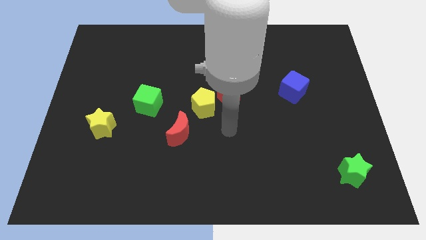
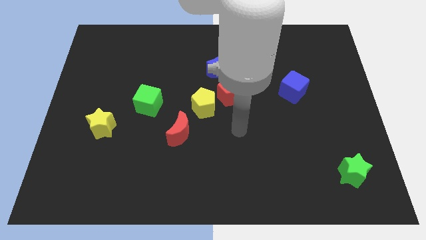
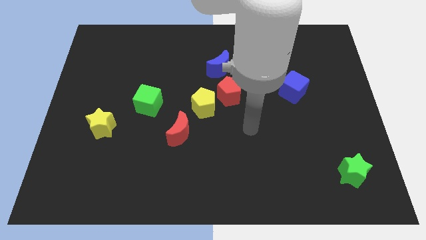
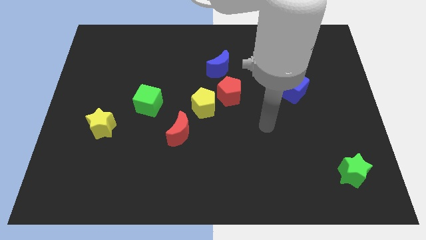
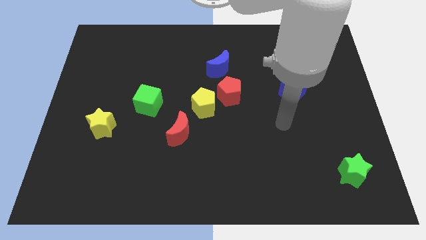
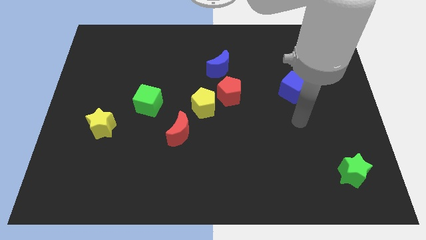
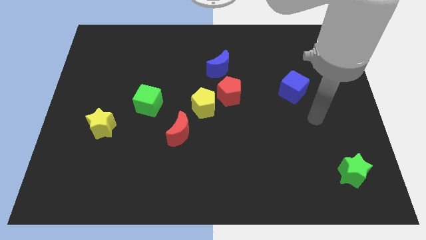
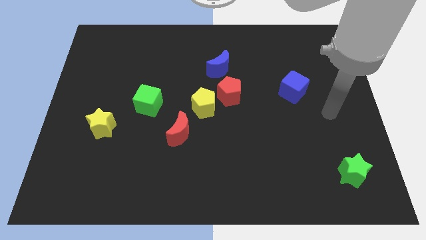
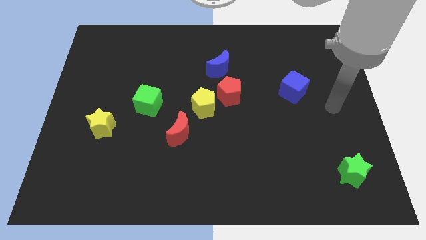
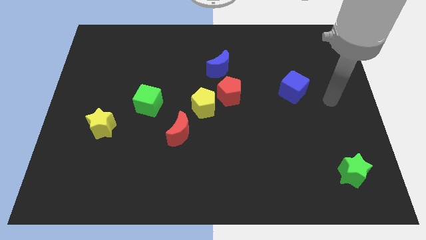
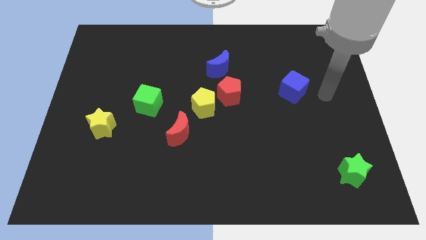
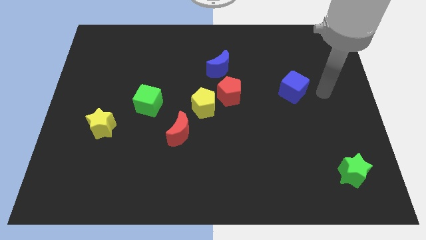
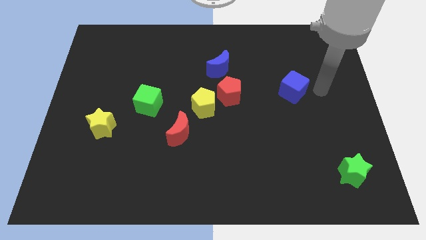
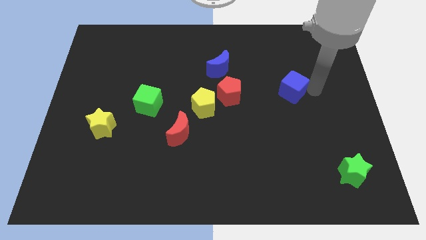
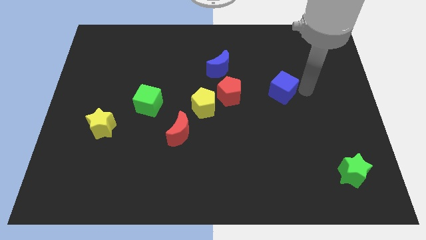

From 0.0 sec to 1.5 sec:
move your arm right towards the blue cube

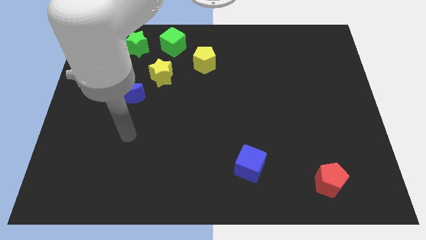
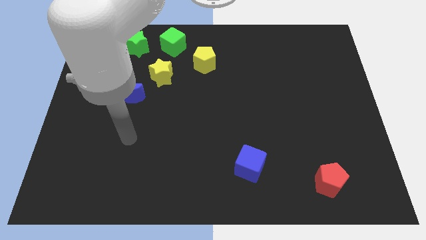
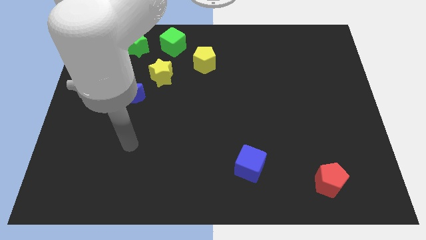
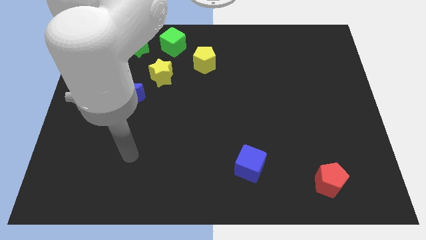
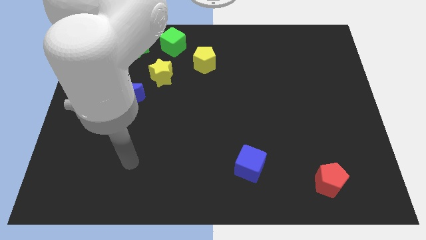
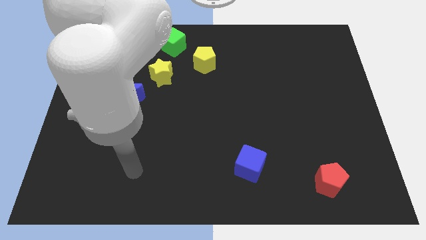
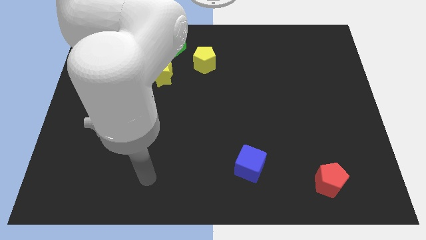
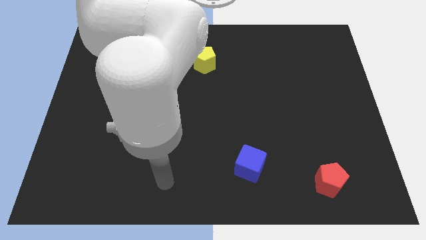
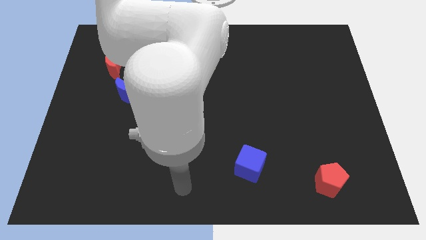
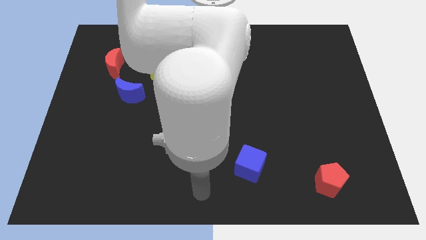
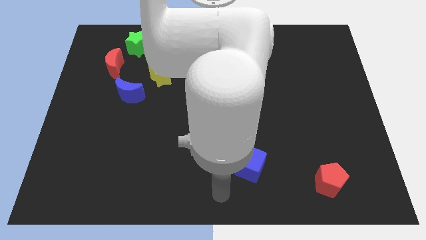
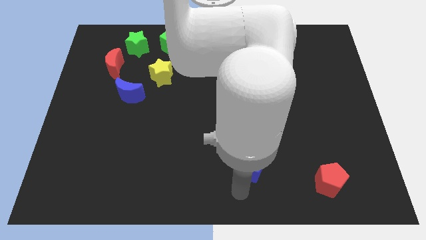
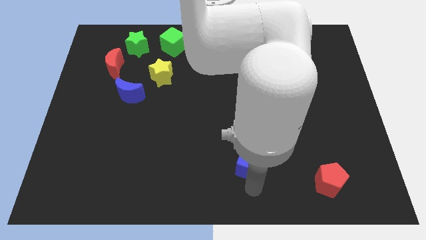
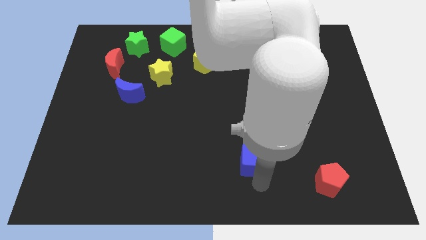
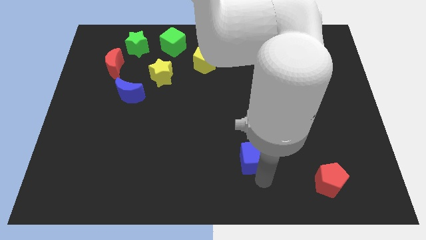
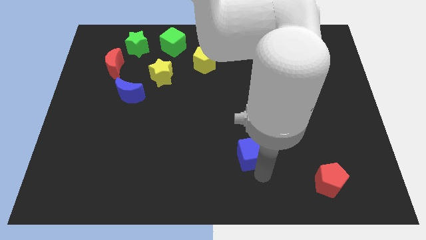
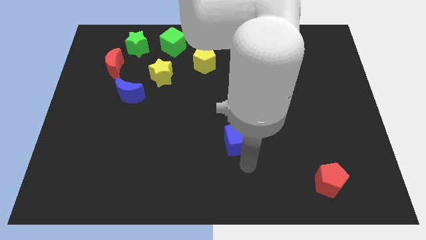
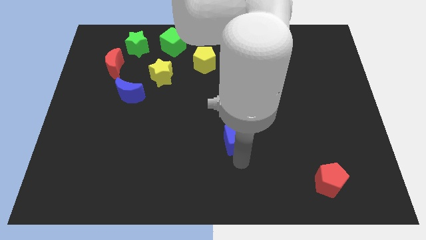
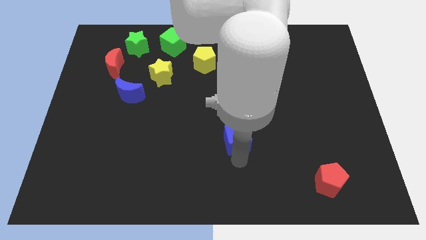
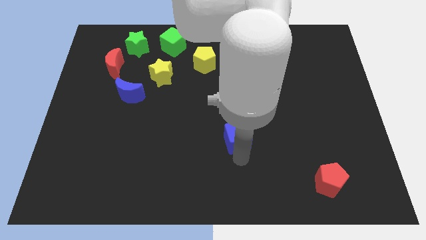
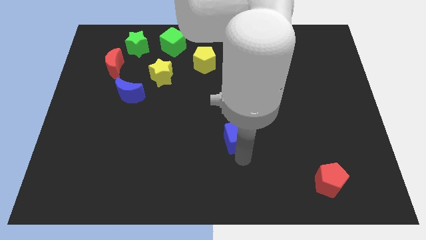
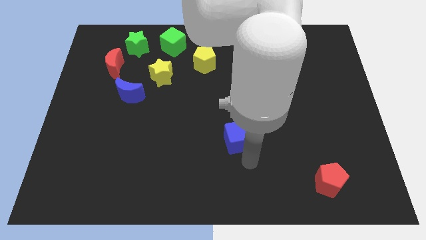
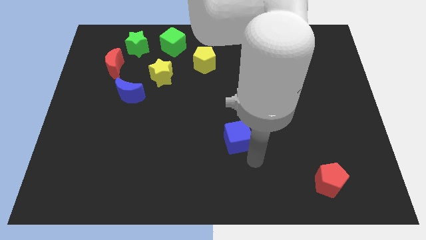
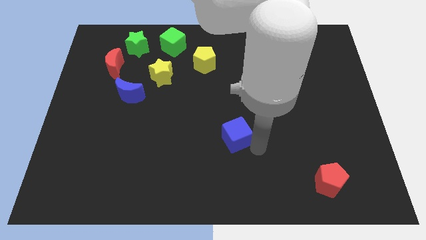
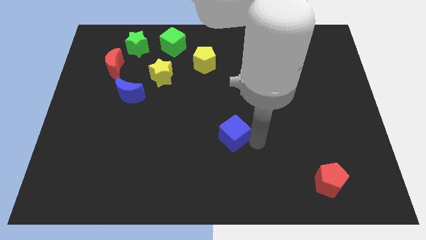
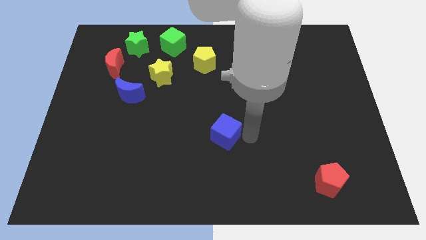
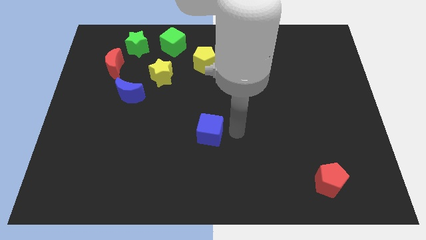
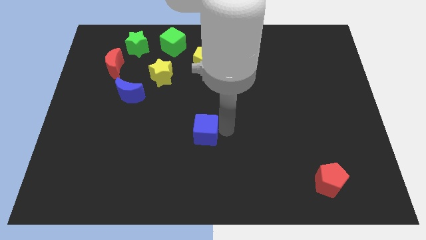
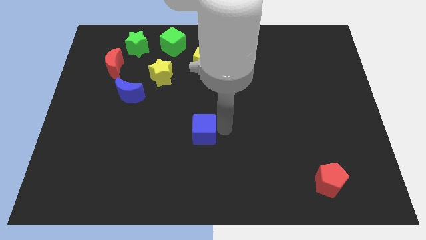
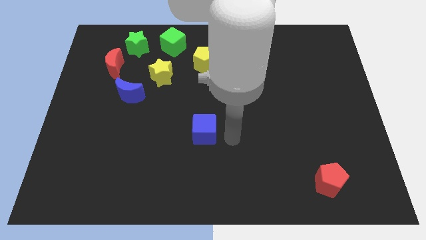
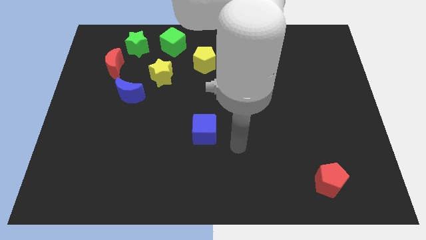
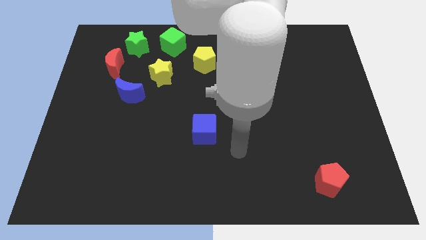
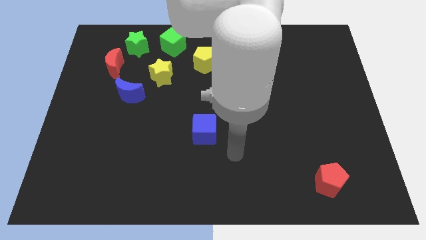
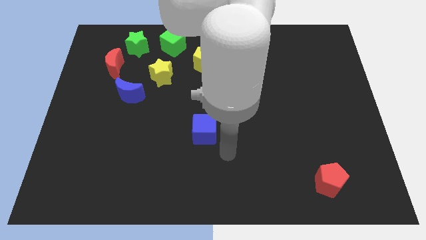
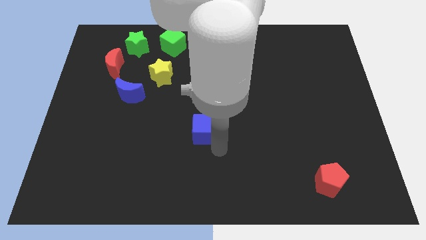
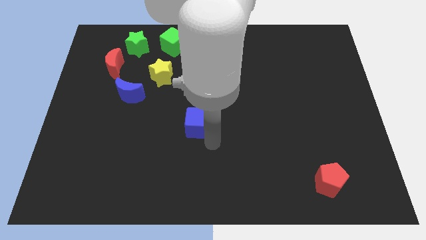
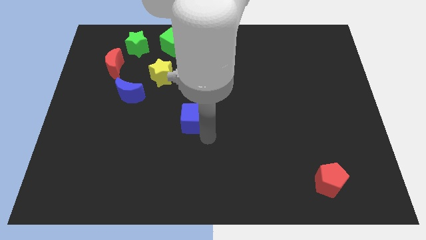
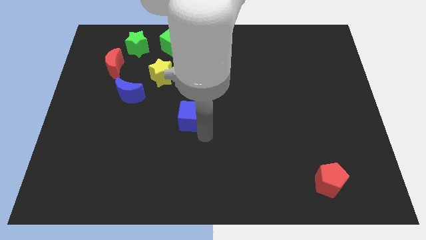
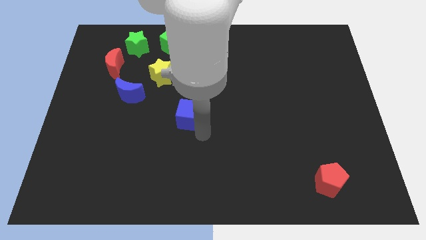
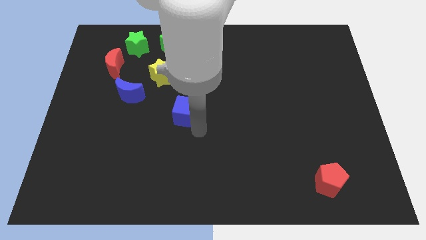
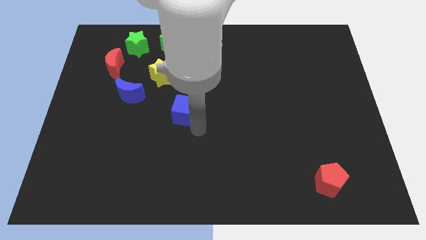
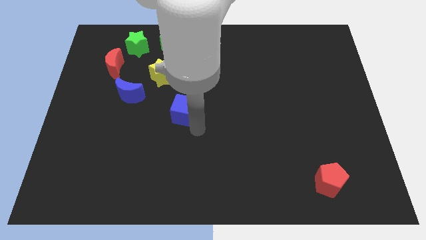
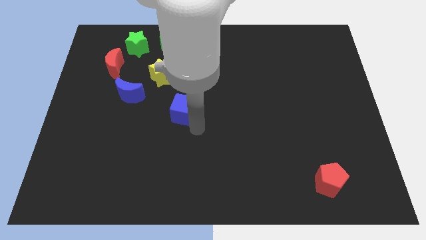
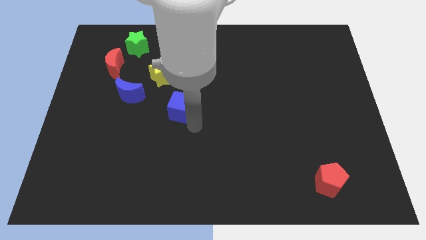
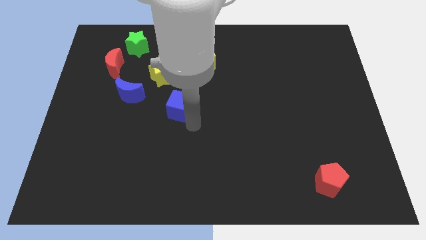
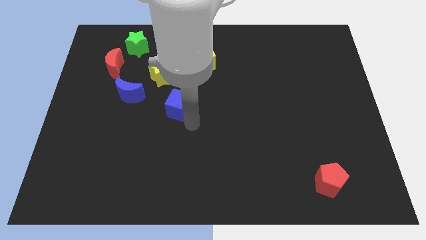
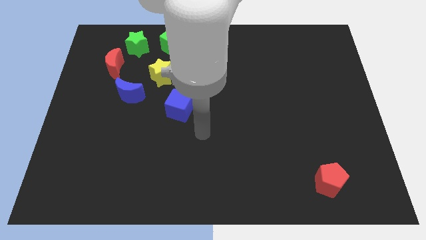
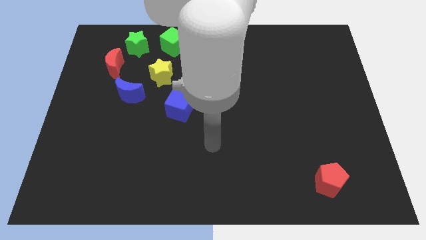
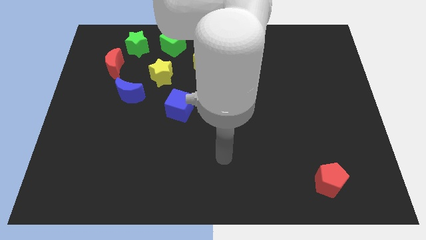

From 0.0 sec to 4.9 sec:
place the blue cube below the yellow star

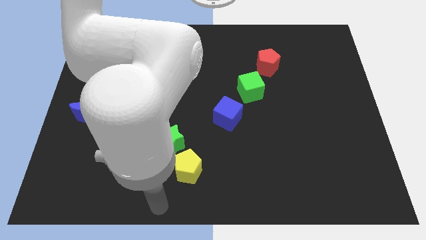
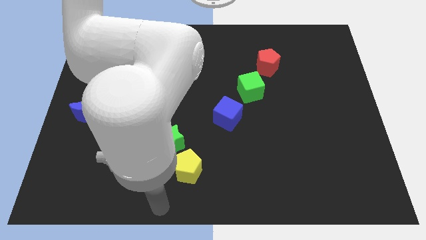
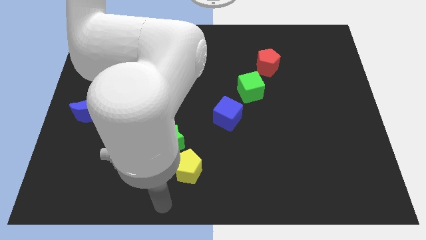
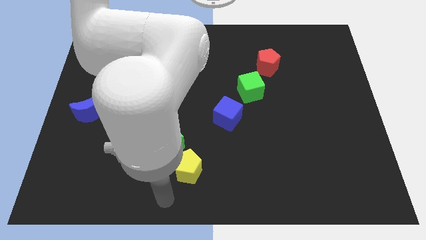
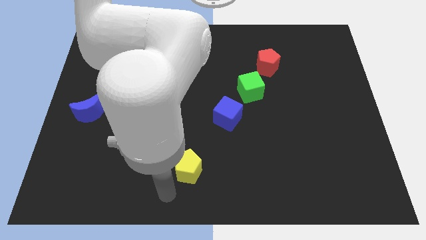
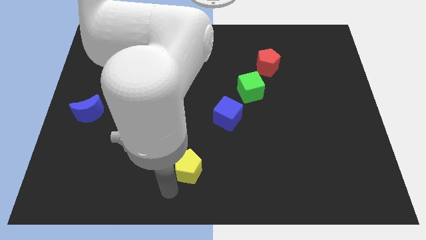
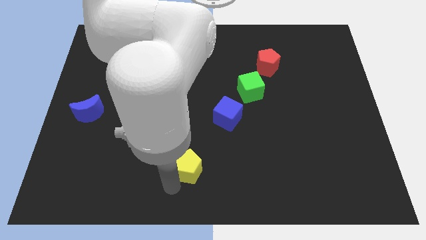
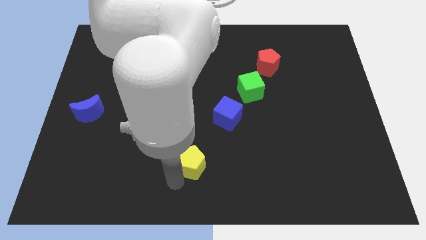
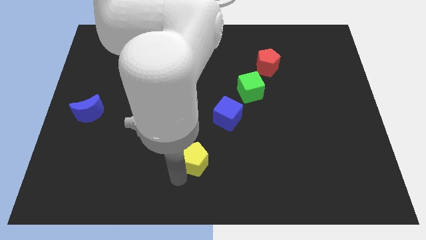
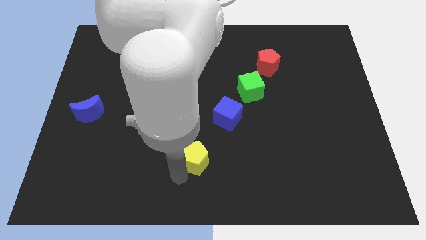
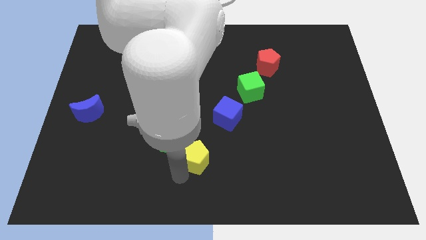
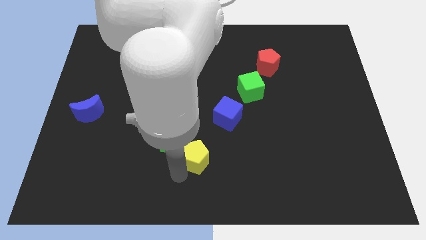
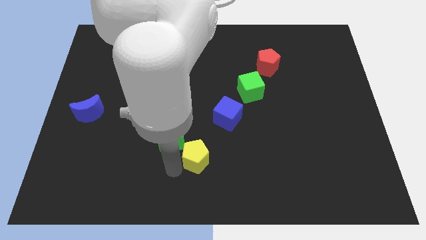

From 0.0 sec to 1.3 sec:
slightly push the yellow pentagon towards the bottom of the green star

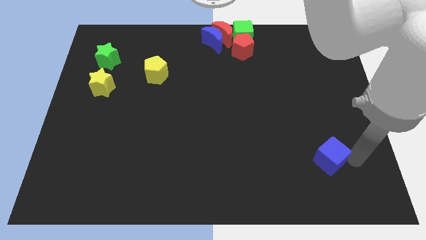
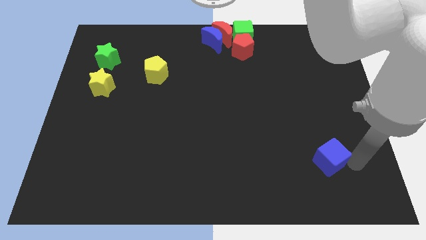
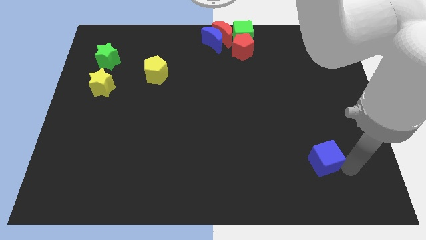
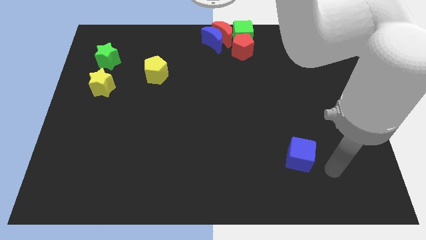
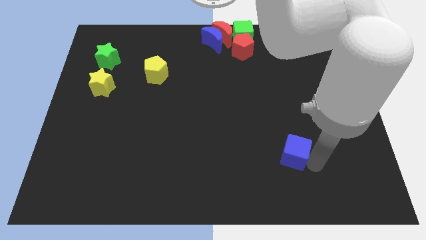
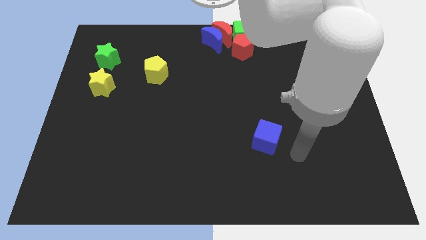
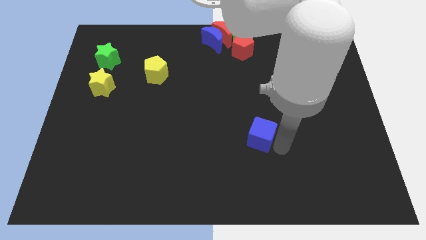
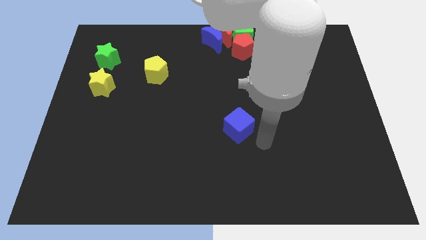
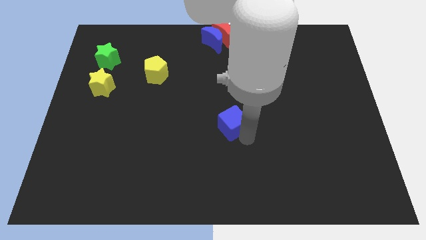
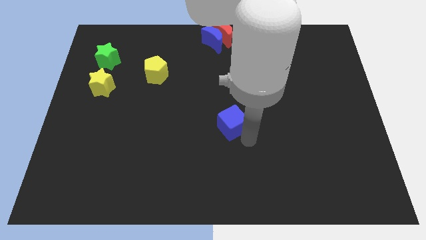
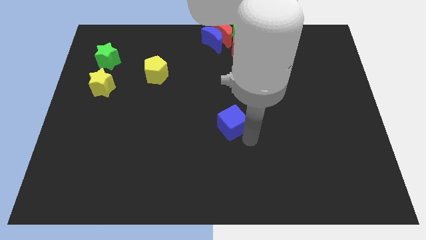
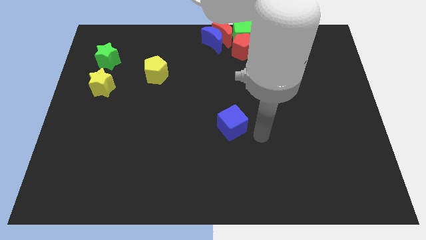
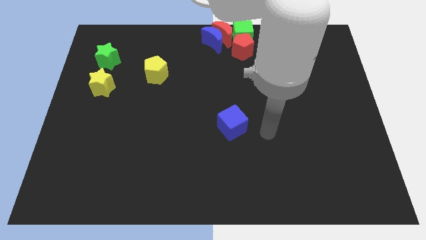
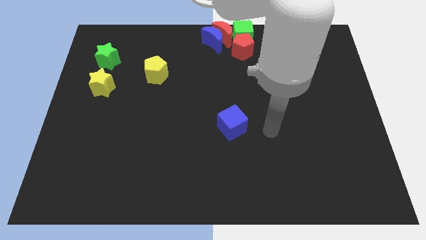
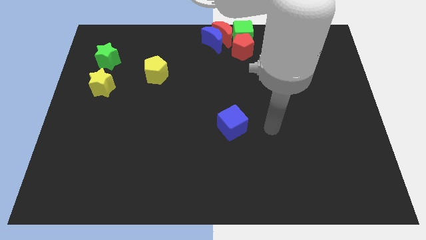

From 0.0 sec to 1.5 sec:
move the blue cube to the center of the board
